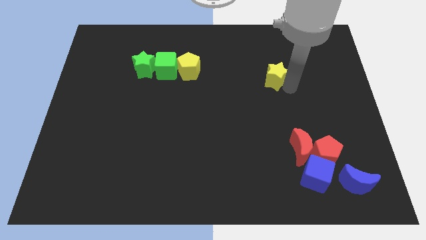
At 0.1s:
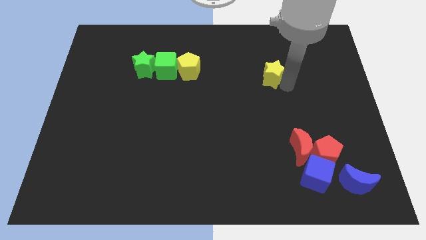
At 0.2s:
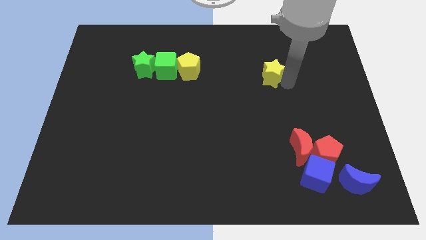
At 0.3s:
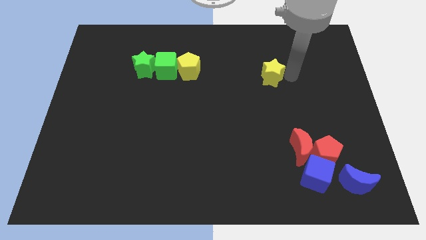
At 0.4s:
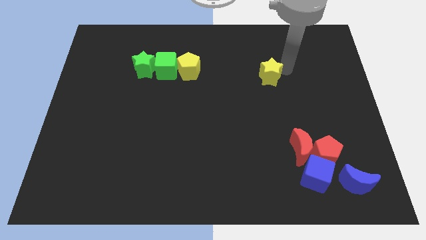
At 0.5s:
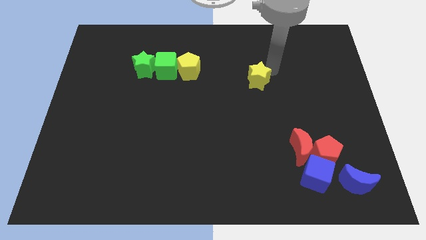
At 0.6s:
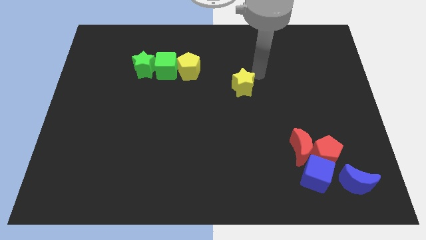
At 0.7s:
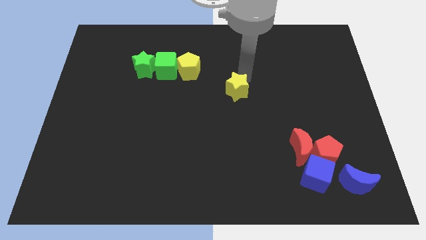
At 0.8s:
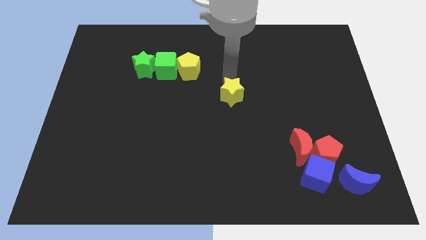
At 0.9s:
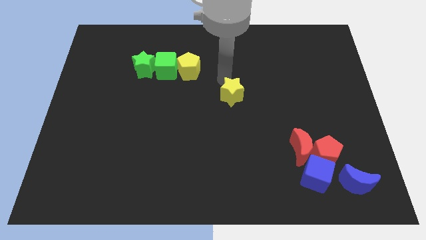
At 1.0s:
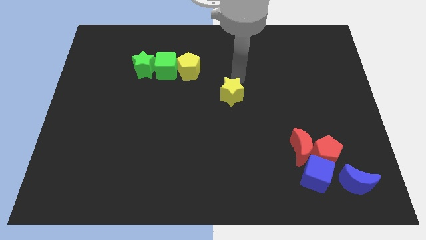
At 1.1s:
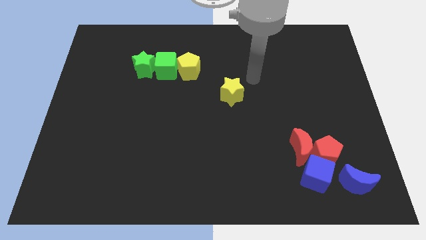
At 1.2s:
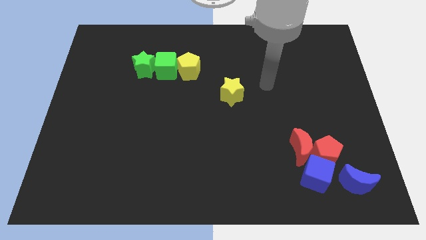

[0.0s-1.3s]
place the yellow diagonally below the bottom right side of the yellow pentagon

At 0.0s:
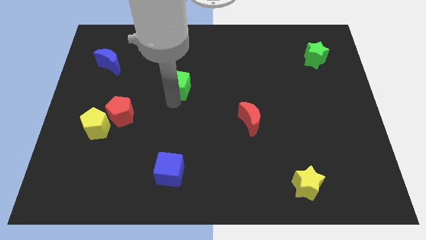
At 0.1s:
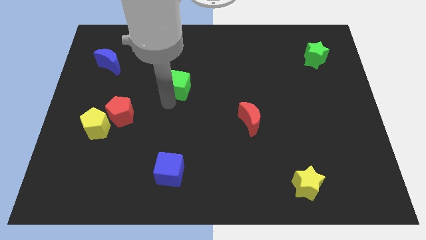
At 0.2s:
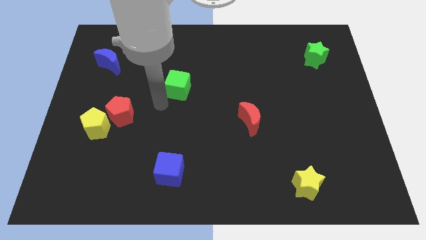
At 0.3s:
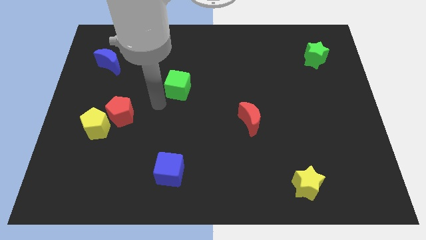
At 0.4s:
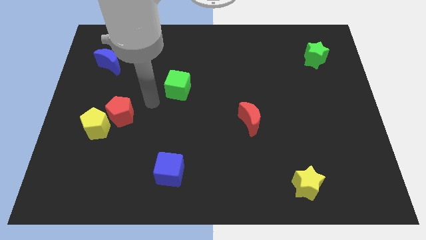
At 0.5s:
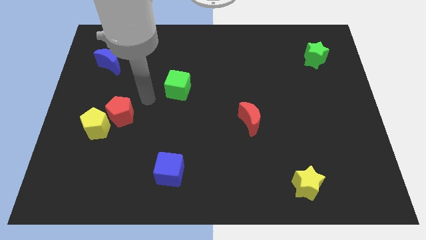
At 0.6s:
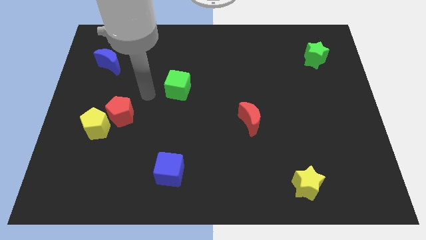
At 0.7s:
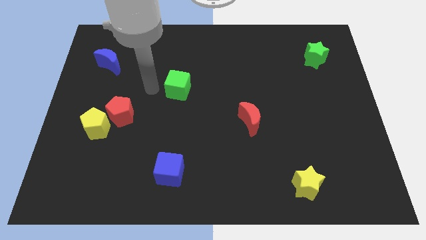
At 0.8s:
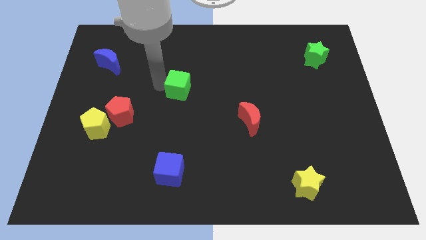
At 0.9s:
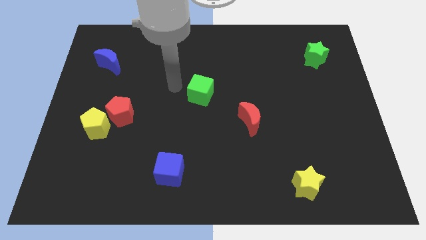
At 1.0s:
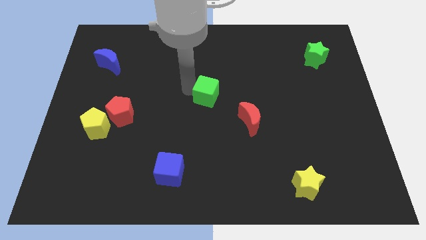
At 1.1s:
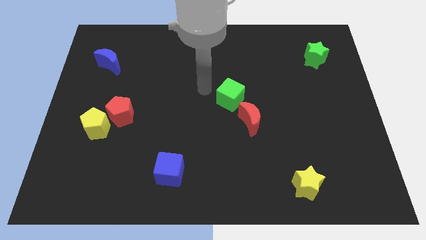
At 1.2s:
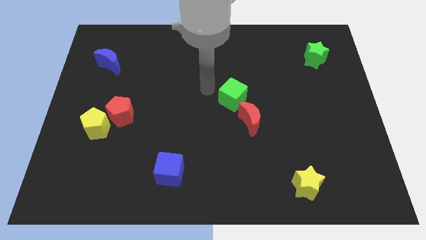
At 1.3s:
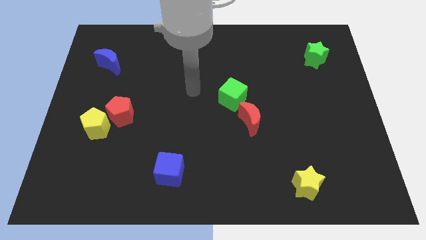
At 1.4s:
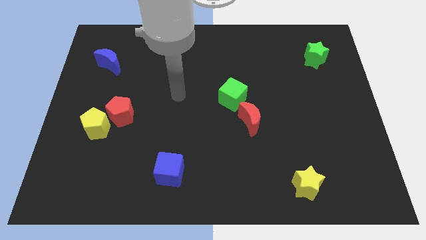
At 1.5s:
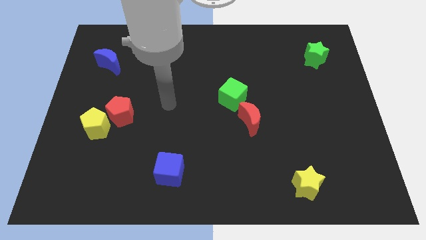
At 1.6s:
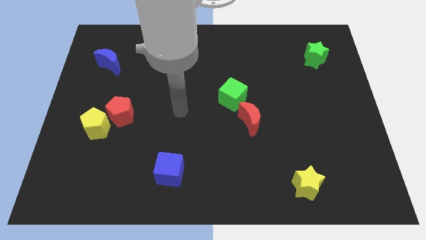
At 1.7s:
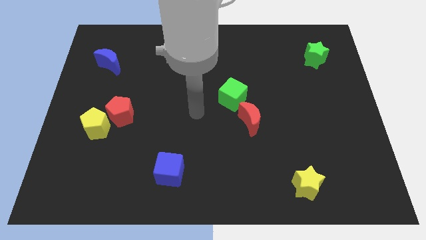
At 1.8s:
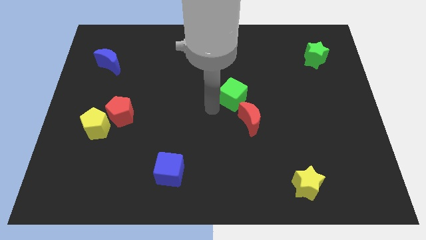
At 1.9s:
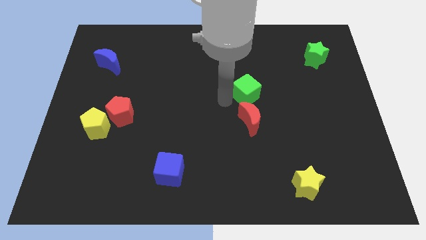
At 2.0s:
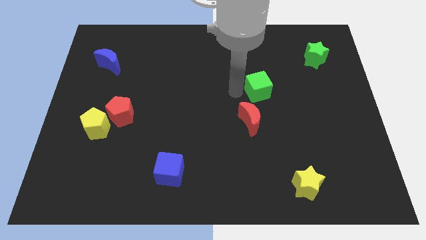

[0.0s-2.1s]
slide green cube on top of red moon

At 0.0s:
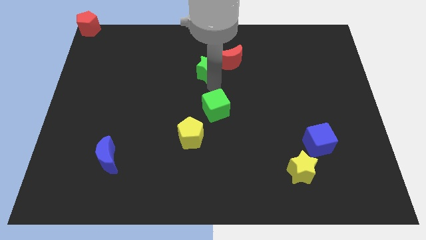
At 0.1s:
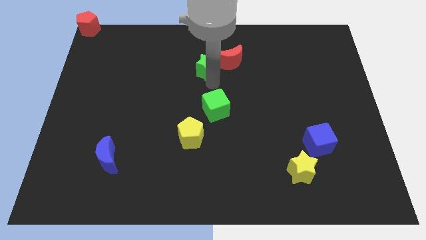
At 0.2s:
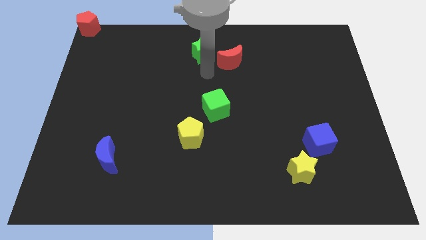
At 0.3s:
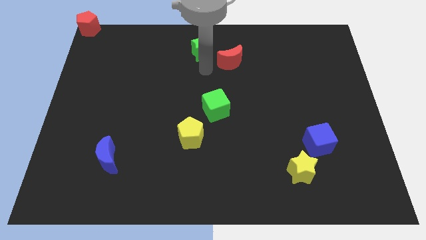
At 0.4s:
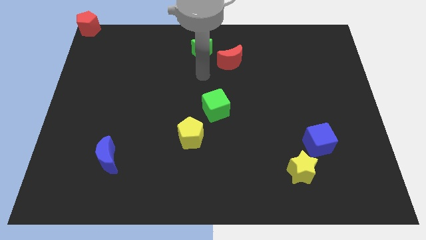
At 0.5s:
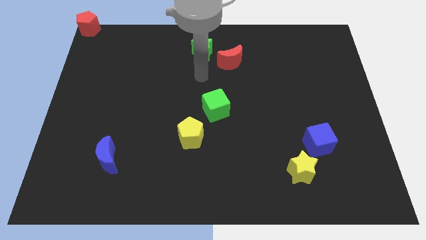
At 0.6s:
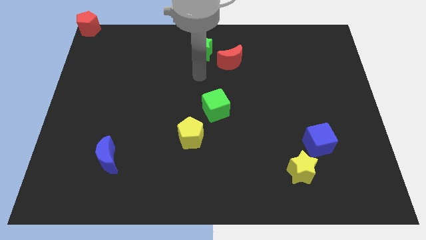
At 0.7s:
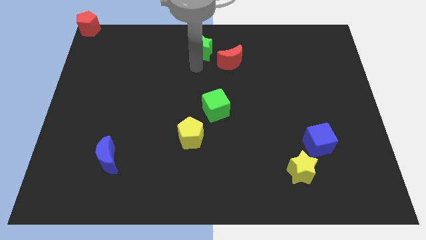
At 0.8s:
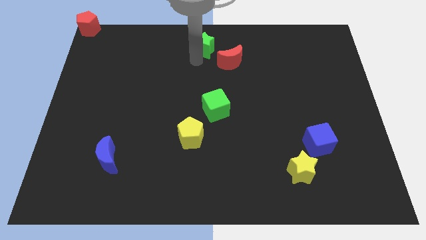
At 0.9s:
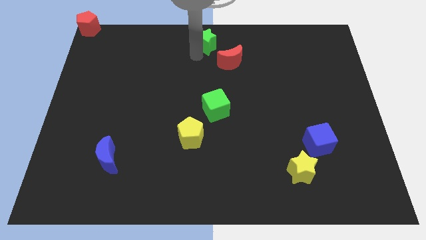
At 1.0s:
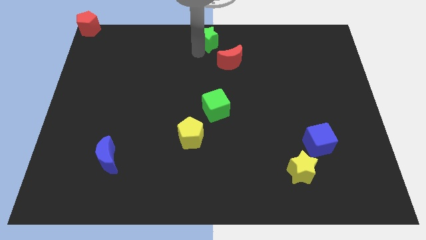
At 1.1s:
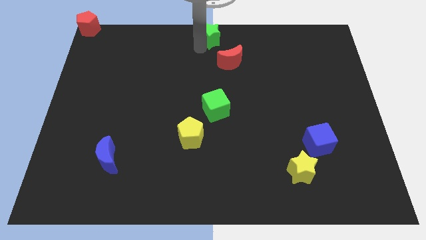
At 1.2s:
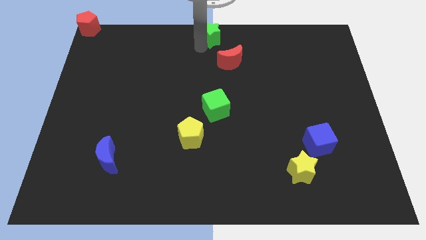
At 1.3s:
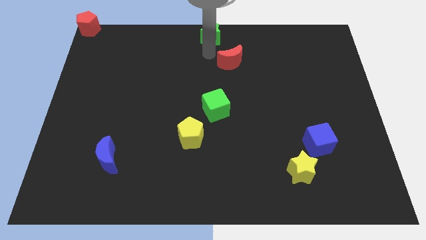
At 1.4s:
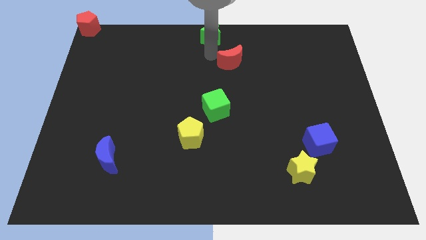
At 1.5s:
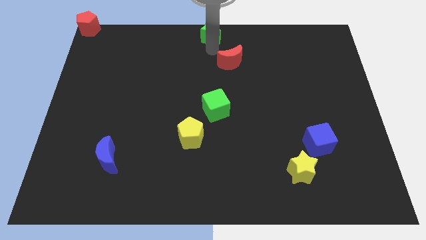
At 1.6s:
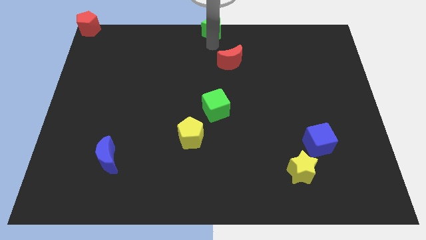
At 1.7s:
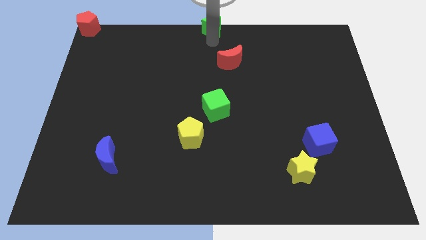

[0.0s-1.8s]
push the green star at the top center

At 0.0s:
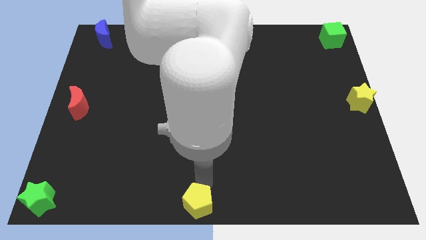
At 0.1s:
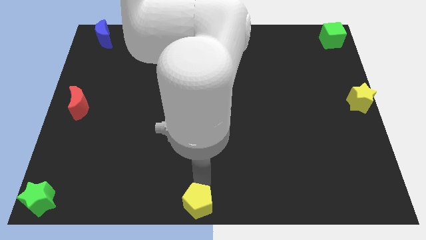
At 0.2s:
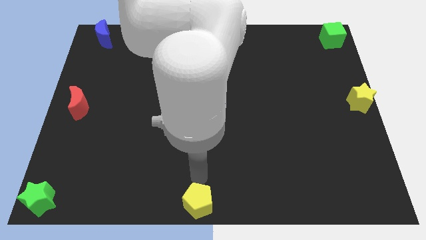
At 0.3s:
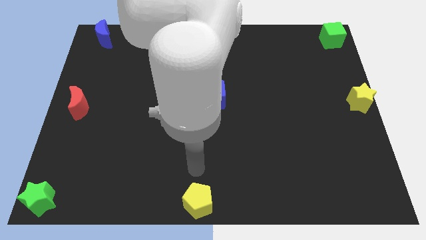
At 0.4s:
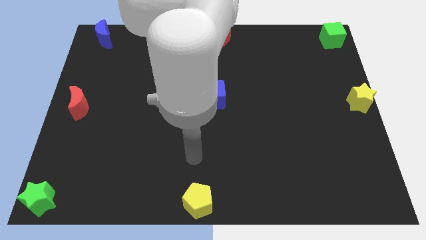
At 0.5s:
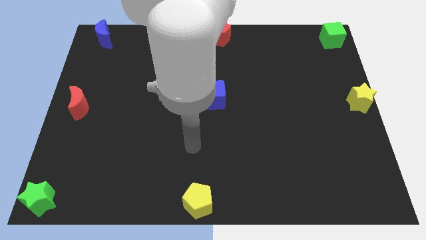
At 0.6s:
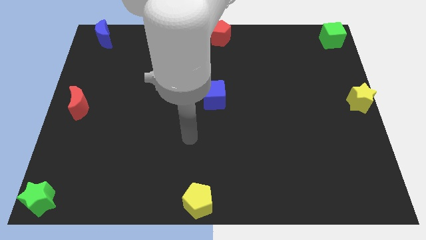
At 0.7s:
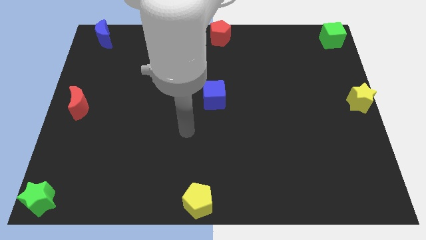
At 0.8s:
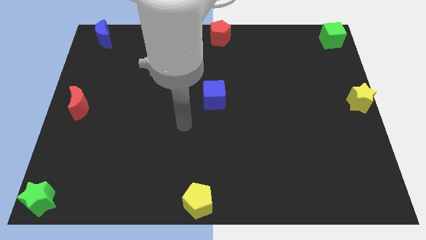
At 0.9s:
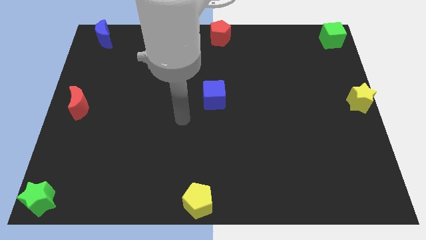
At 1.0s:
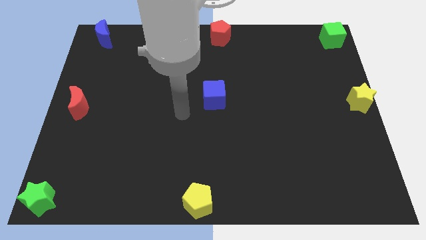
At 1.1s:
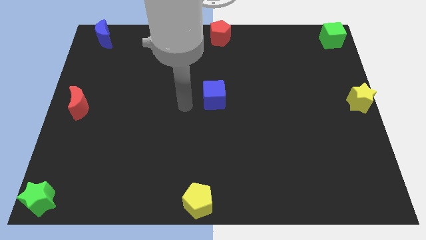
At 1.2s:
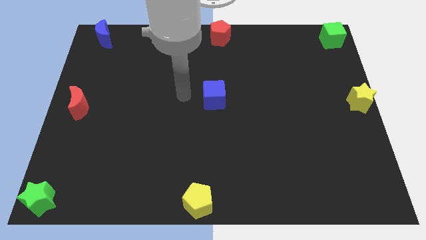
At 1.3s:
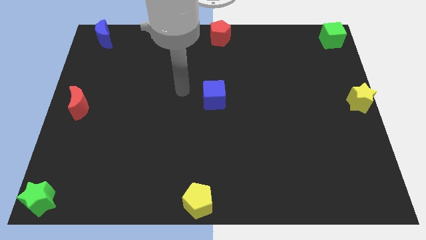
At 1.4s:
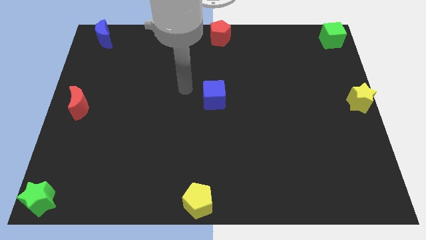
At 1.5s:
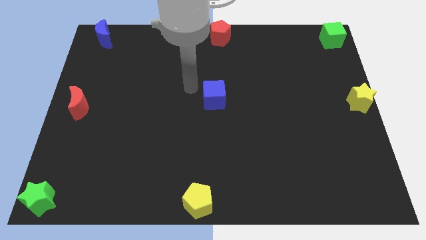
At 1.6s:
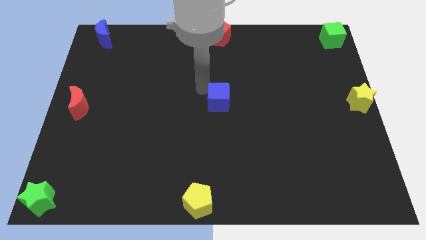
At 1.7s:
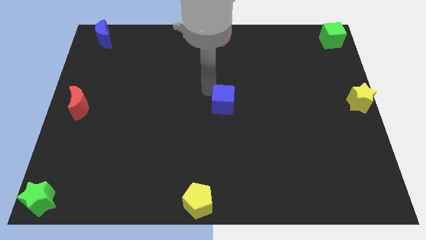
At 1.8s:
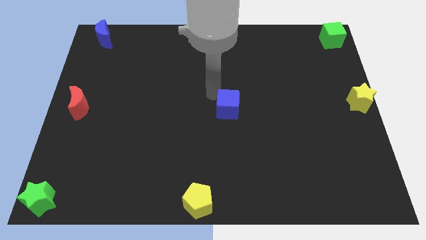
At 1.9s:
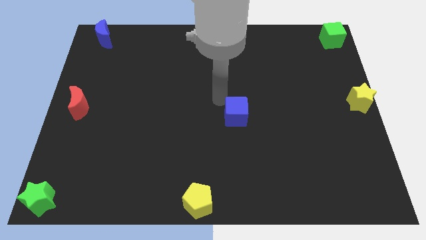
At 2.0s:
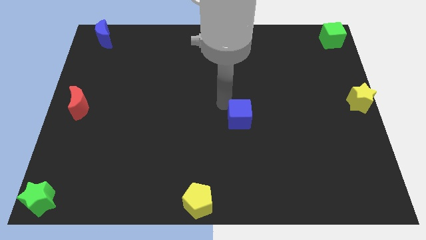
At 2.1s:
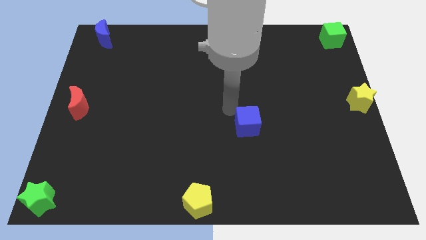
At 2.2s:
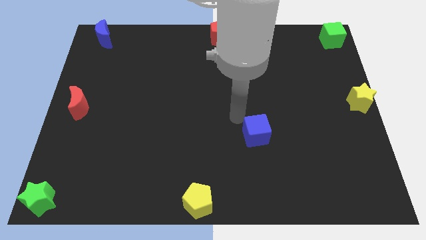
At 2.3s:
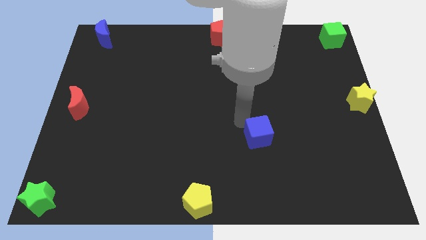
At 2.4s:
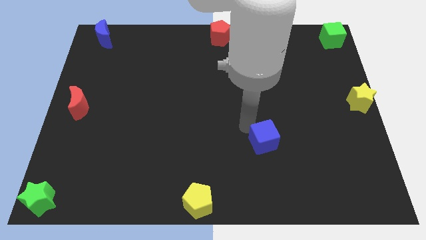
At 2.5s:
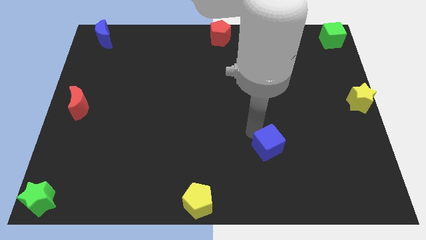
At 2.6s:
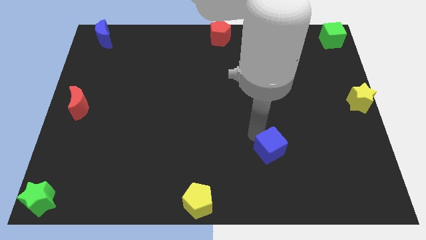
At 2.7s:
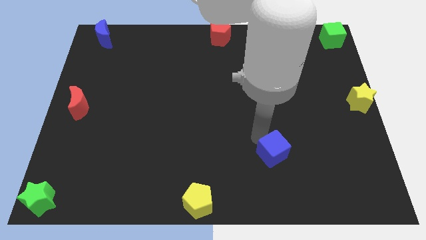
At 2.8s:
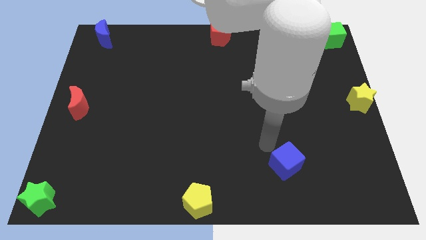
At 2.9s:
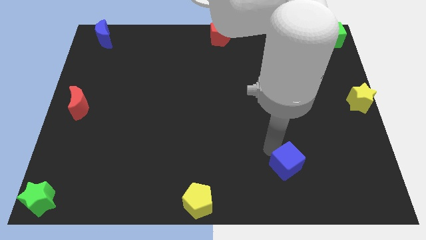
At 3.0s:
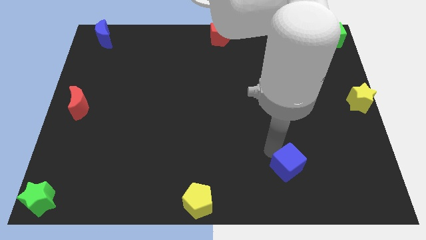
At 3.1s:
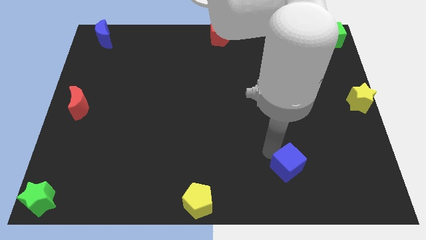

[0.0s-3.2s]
move the blue cube diagonally top right to the yellow pentagon

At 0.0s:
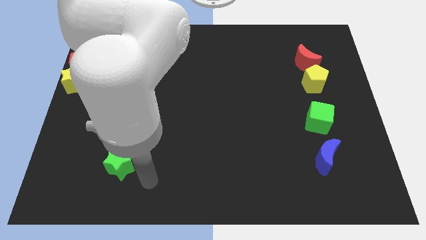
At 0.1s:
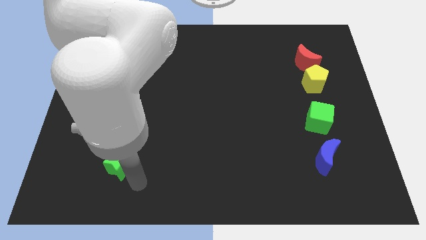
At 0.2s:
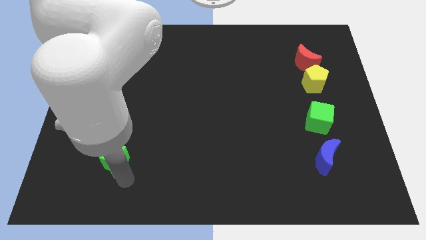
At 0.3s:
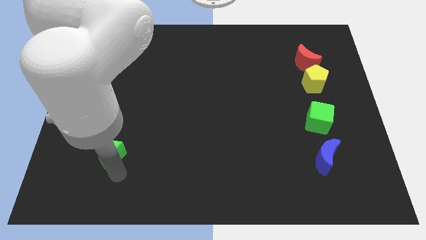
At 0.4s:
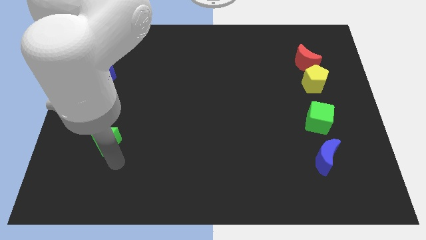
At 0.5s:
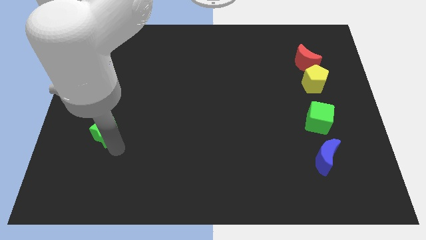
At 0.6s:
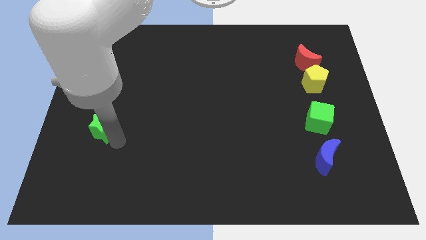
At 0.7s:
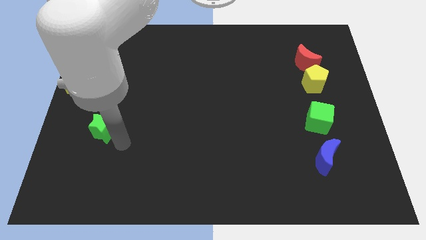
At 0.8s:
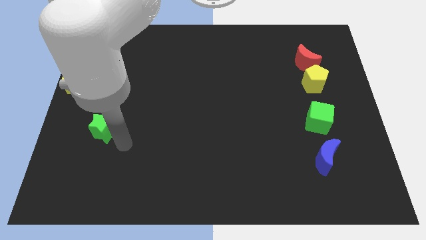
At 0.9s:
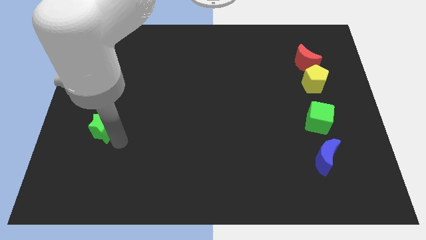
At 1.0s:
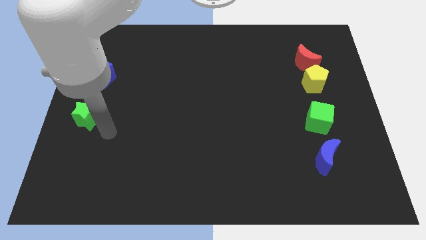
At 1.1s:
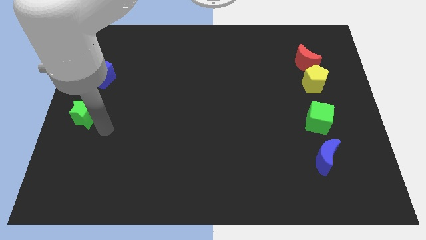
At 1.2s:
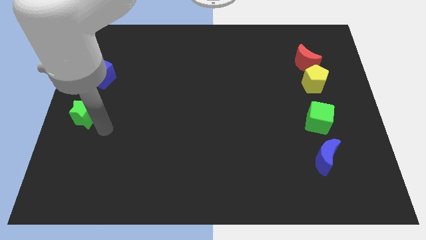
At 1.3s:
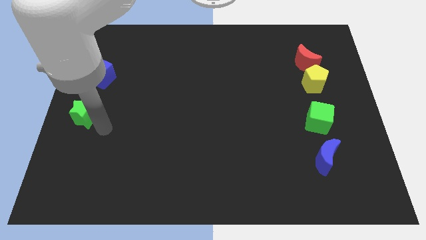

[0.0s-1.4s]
move the green star below the blue cube
